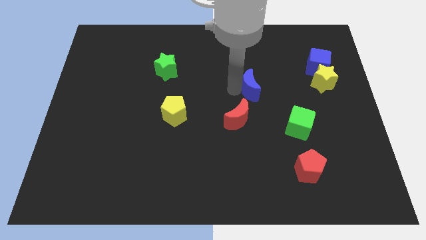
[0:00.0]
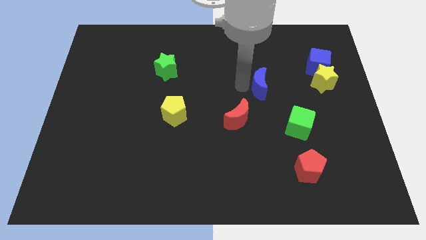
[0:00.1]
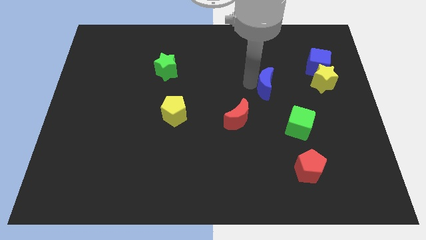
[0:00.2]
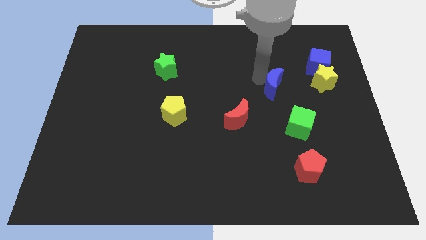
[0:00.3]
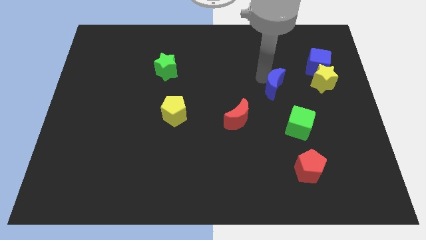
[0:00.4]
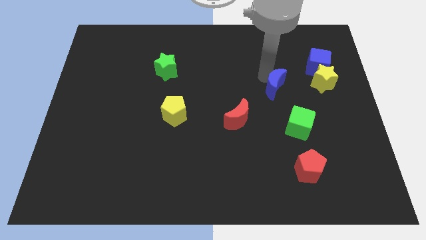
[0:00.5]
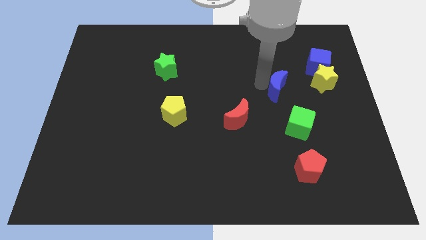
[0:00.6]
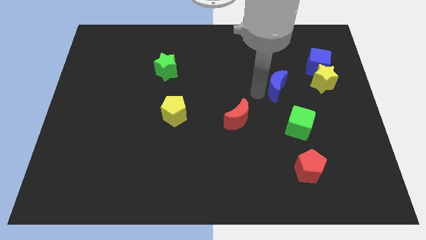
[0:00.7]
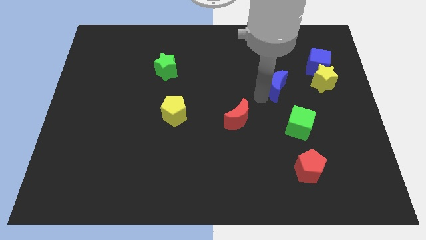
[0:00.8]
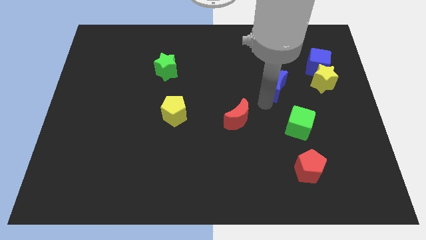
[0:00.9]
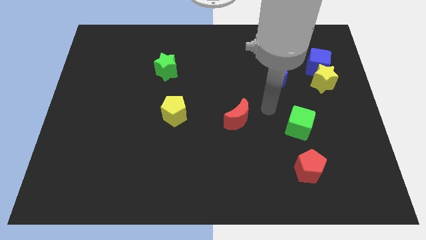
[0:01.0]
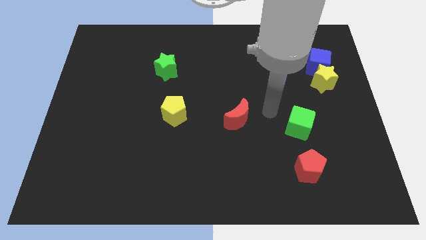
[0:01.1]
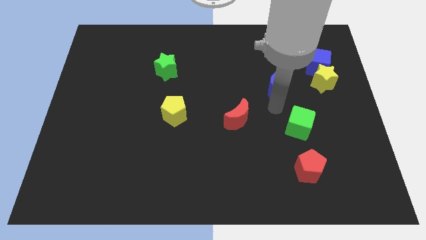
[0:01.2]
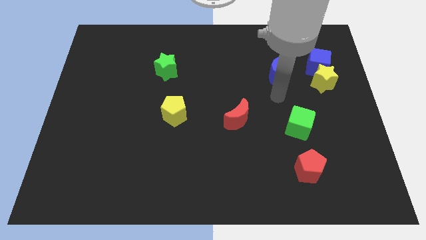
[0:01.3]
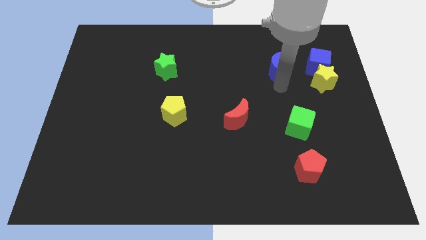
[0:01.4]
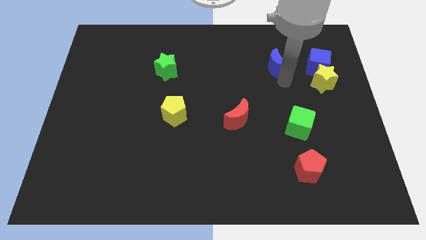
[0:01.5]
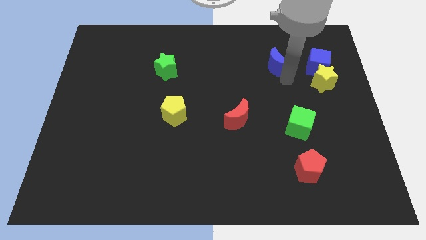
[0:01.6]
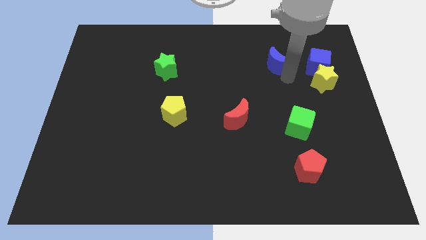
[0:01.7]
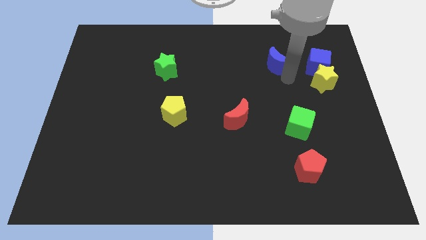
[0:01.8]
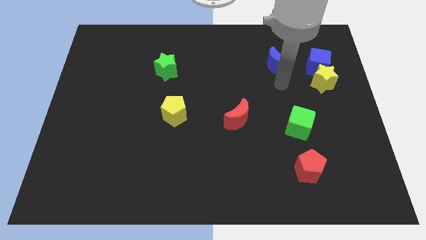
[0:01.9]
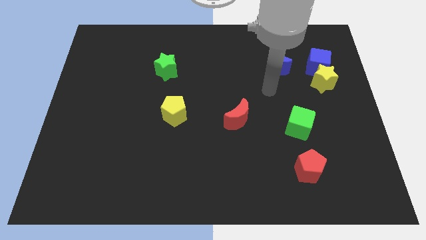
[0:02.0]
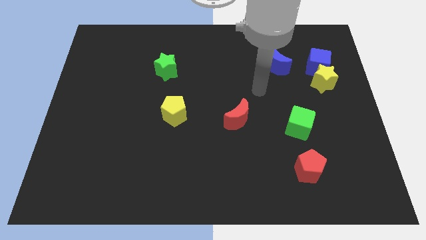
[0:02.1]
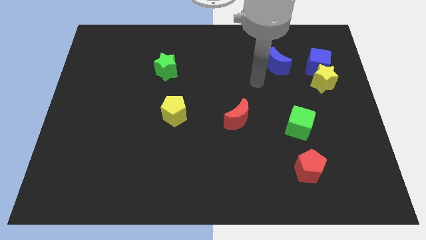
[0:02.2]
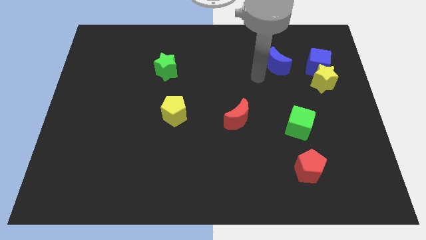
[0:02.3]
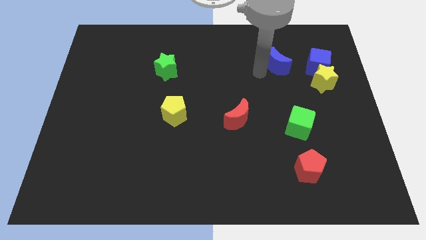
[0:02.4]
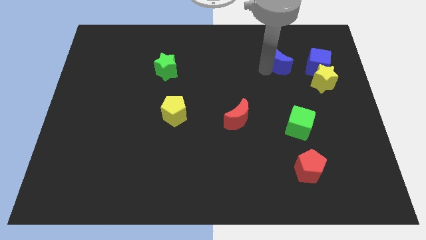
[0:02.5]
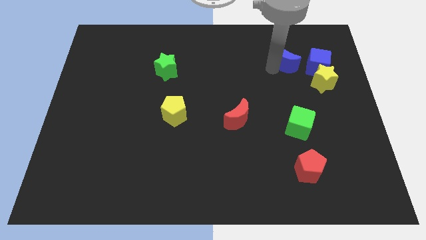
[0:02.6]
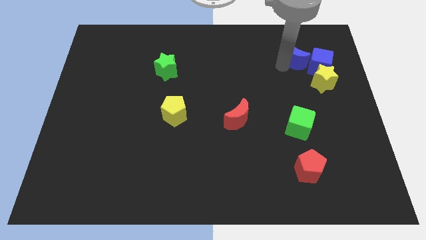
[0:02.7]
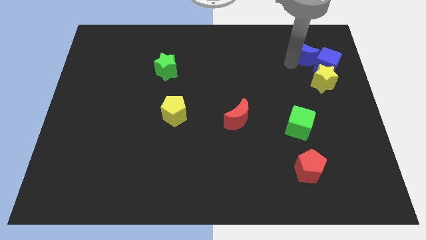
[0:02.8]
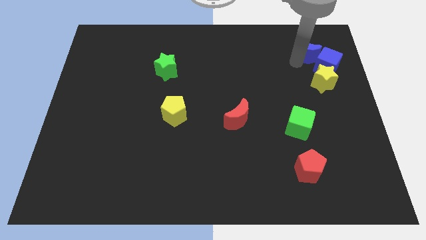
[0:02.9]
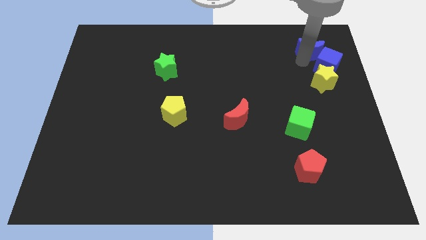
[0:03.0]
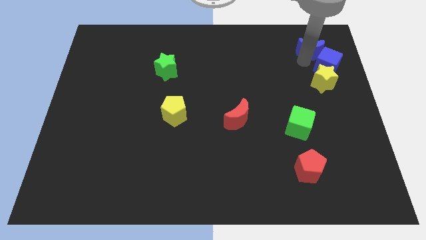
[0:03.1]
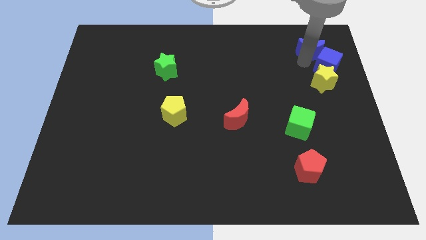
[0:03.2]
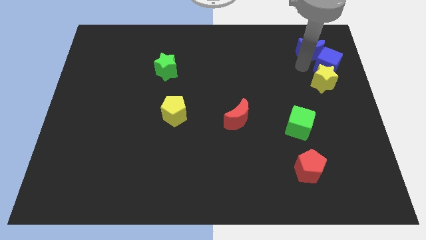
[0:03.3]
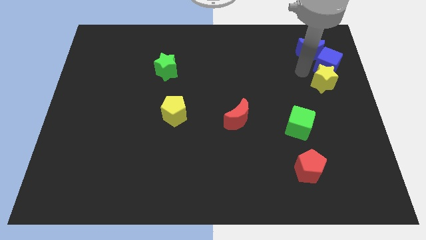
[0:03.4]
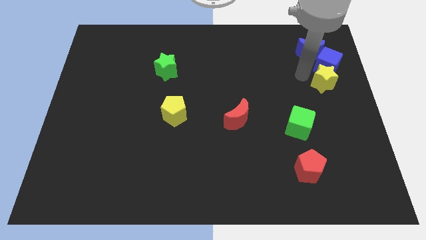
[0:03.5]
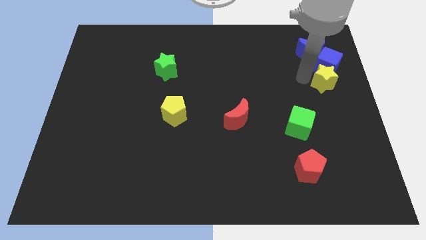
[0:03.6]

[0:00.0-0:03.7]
place the blue crescent above the blue cube

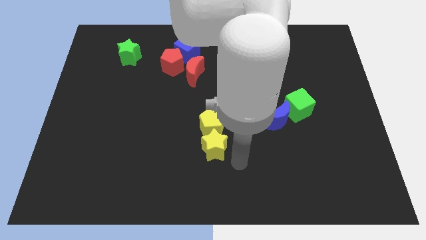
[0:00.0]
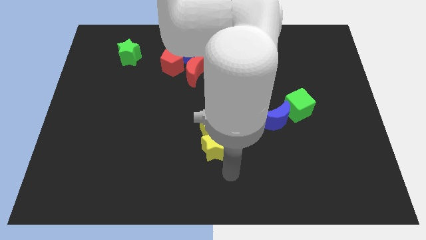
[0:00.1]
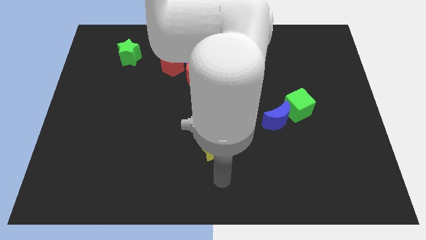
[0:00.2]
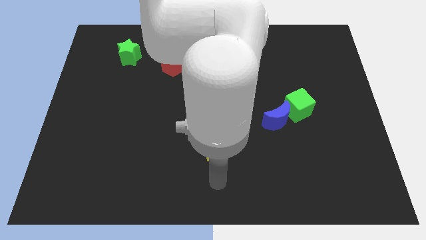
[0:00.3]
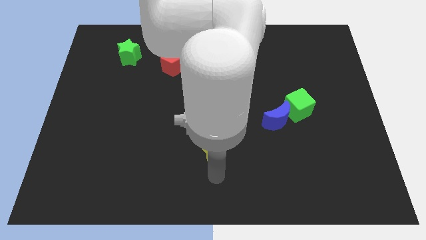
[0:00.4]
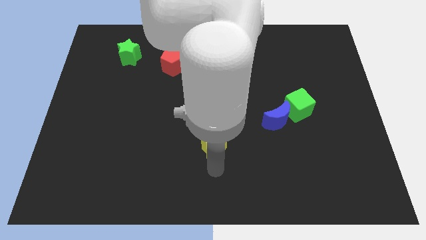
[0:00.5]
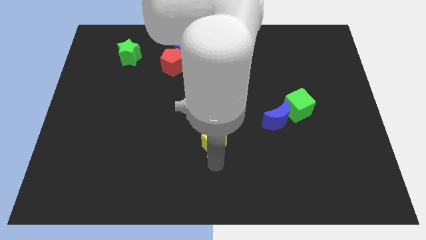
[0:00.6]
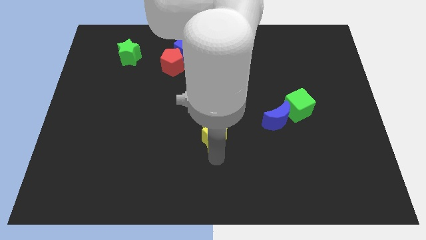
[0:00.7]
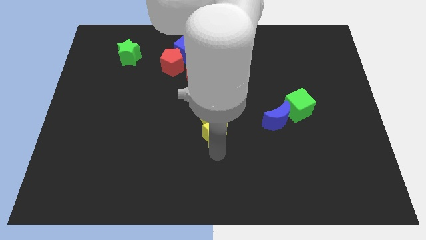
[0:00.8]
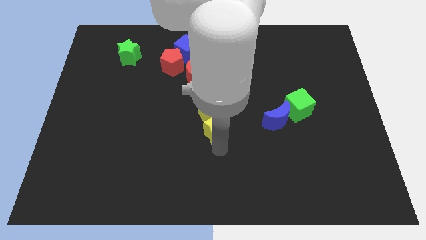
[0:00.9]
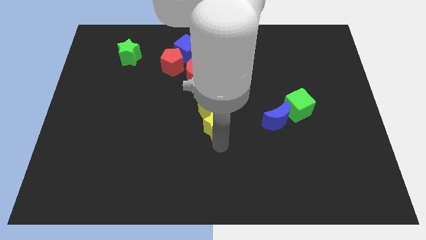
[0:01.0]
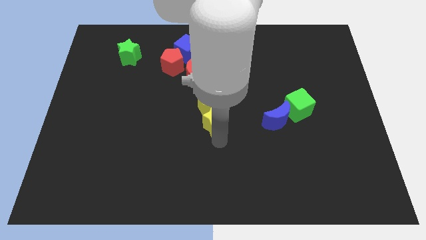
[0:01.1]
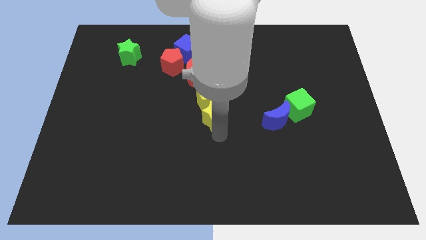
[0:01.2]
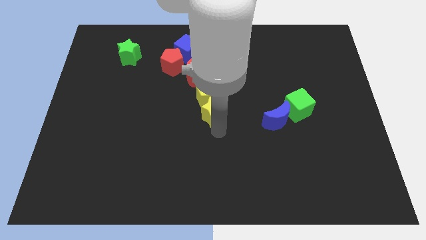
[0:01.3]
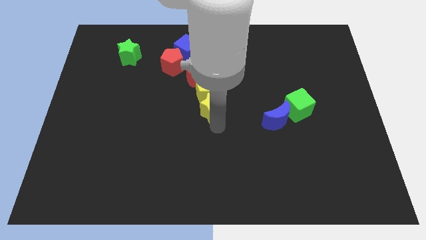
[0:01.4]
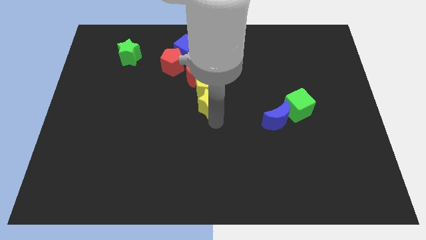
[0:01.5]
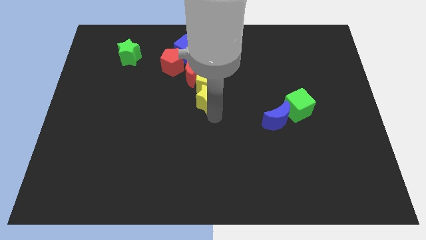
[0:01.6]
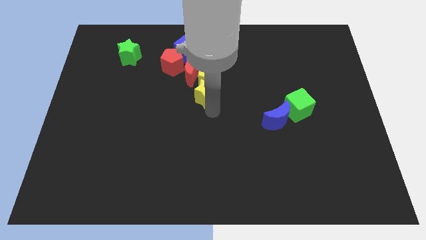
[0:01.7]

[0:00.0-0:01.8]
push the group of yellow blocks into the red crescent

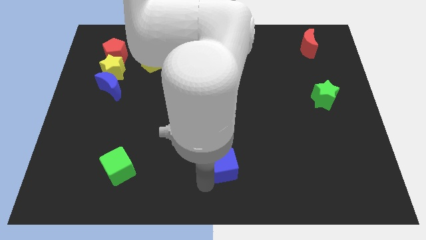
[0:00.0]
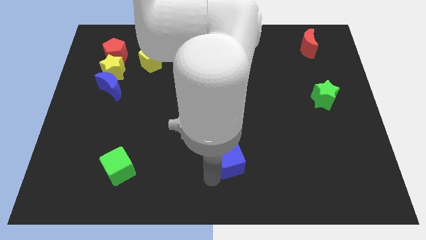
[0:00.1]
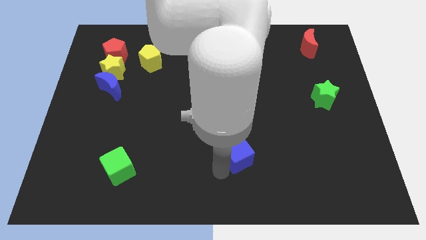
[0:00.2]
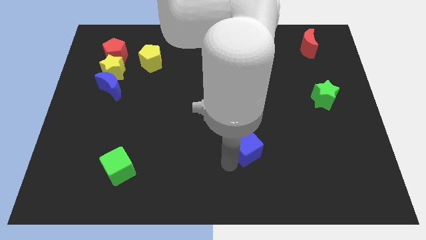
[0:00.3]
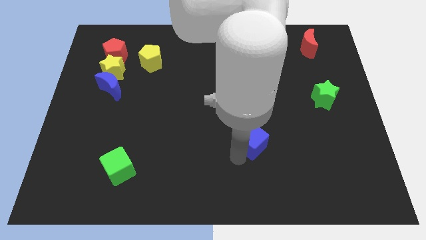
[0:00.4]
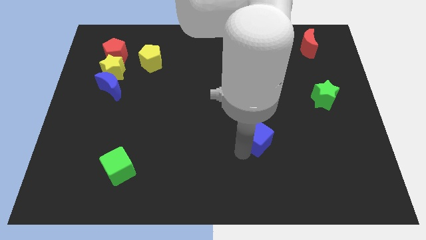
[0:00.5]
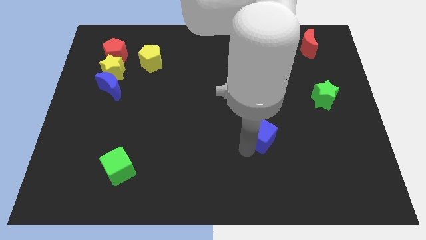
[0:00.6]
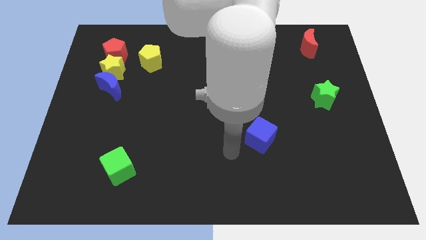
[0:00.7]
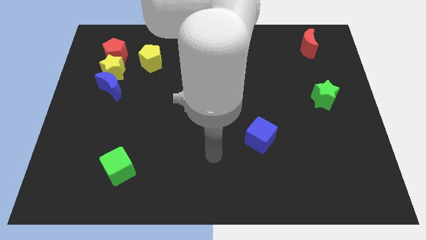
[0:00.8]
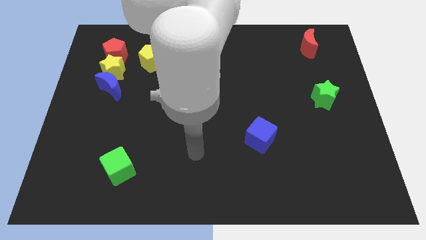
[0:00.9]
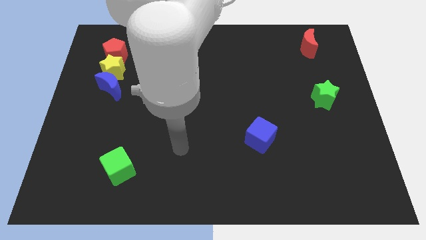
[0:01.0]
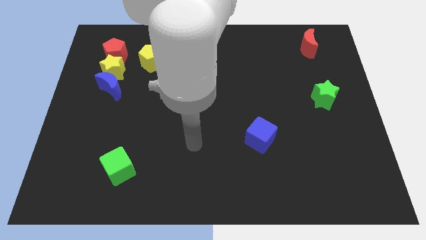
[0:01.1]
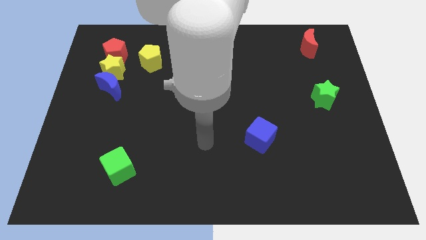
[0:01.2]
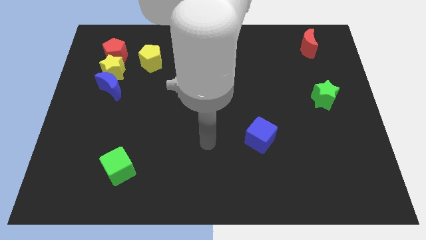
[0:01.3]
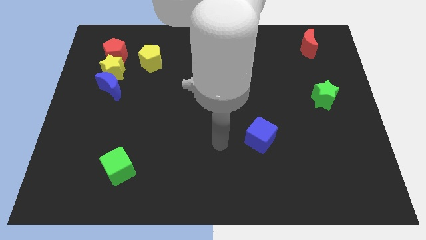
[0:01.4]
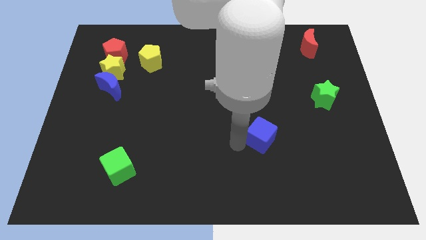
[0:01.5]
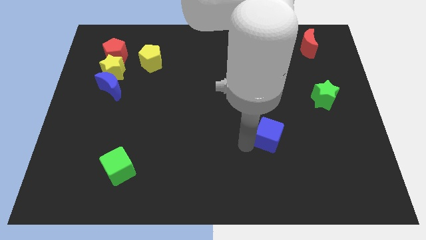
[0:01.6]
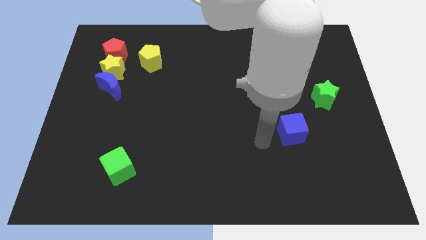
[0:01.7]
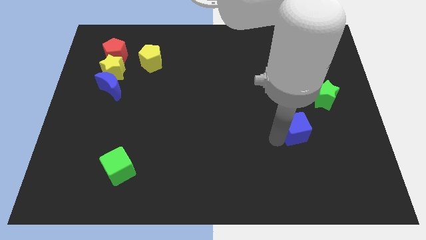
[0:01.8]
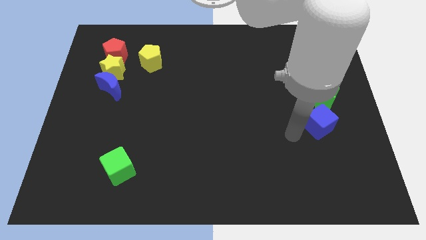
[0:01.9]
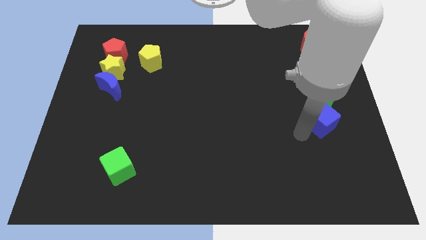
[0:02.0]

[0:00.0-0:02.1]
place blue cube below the green star

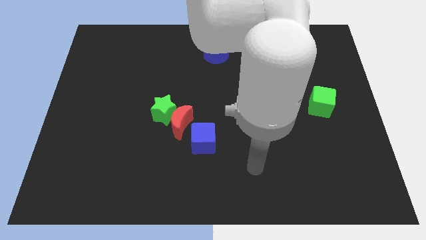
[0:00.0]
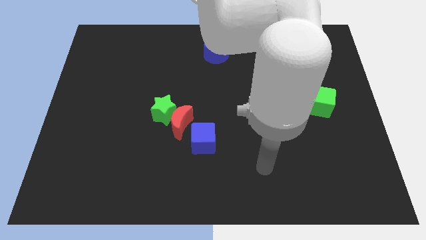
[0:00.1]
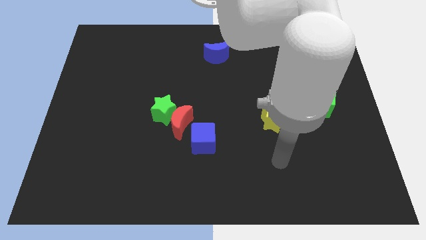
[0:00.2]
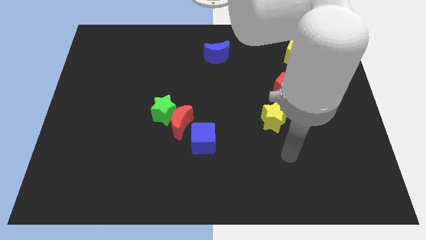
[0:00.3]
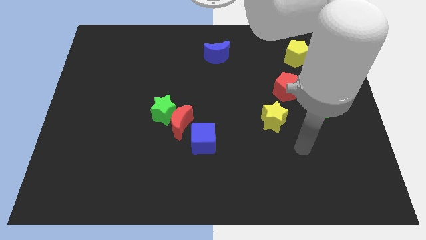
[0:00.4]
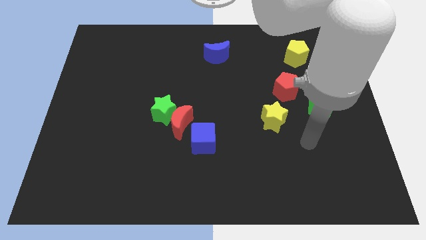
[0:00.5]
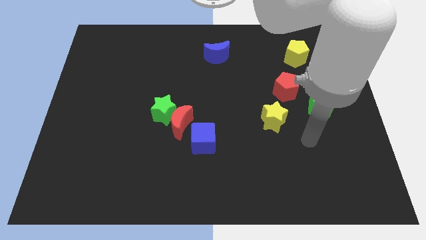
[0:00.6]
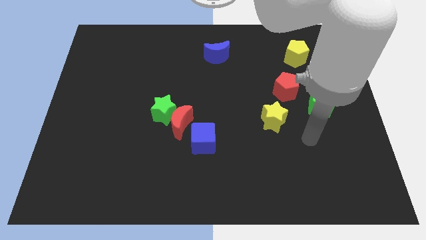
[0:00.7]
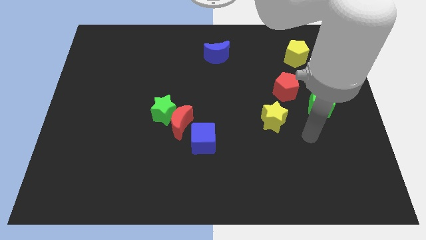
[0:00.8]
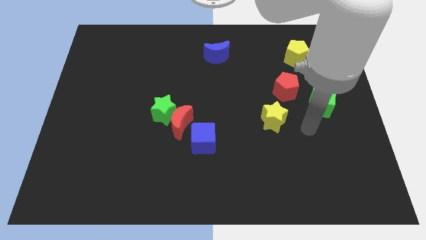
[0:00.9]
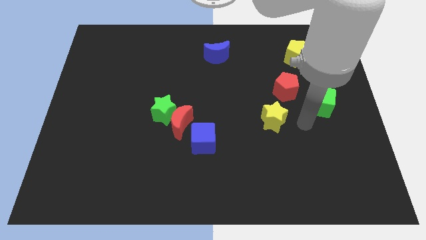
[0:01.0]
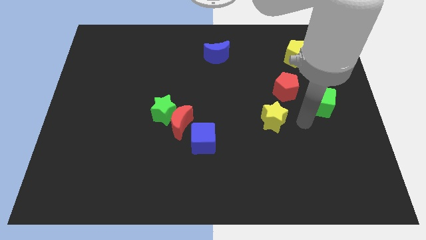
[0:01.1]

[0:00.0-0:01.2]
move arm to the right of yellow star

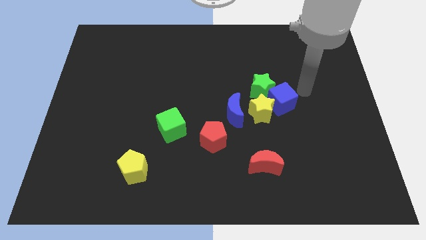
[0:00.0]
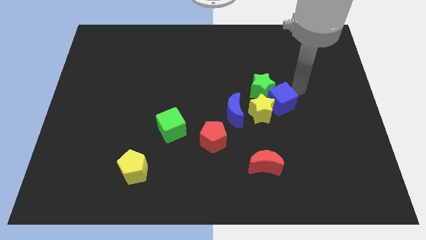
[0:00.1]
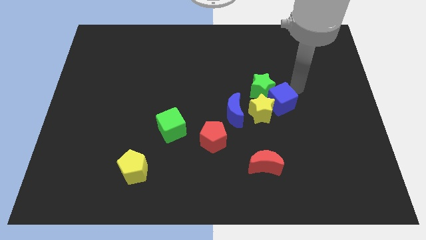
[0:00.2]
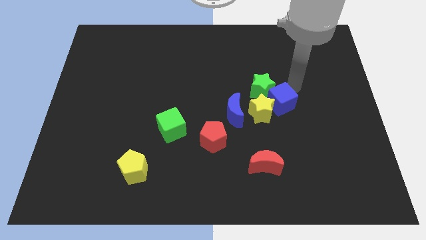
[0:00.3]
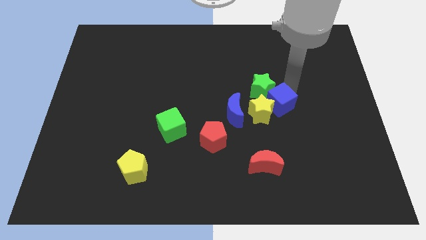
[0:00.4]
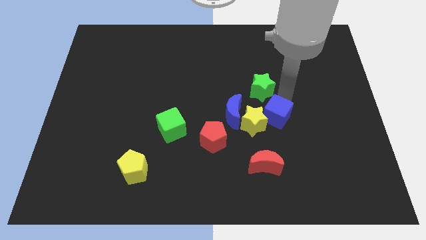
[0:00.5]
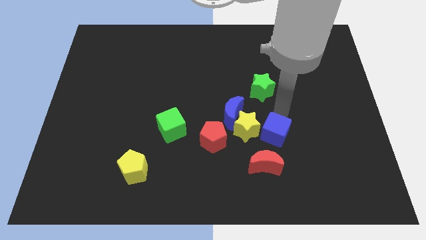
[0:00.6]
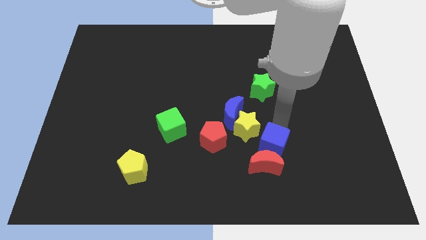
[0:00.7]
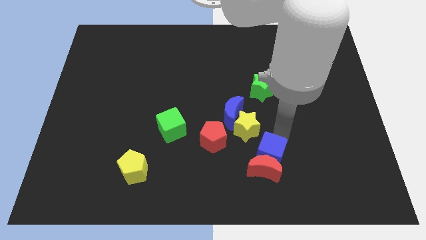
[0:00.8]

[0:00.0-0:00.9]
push blue cube into red moon
